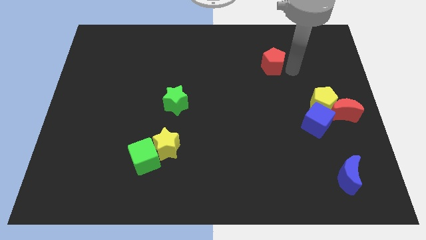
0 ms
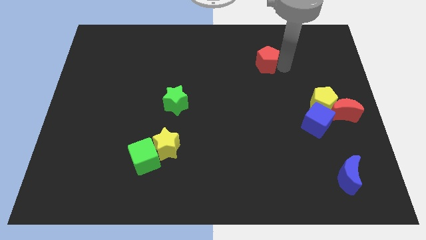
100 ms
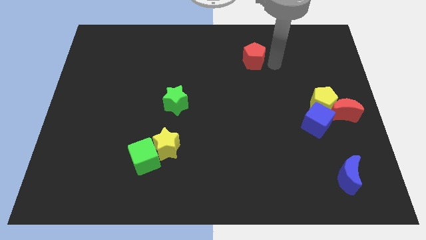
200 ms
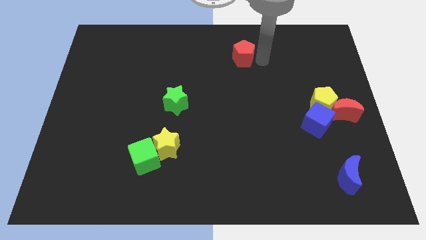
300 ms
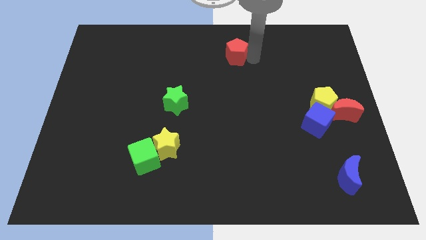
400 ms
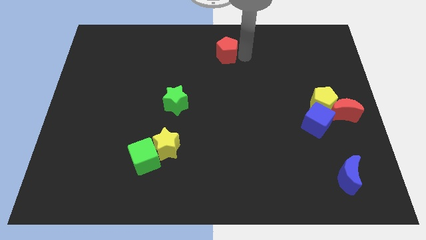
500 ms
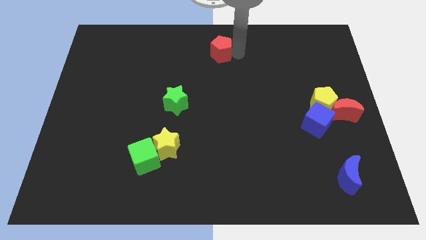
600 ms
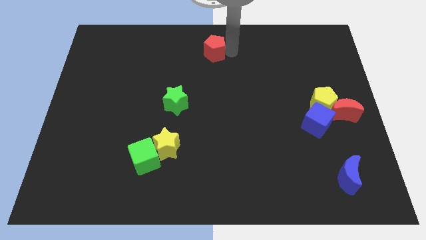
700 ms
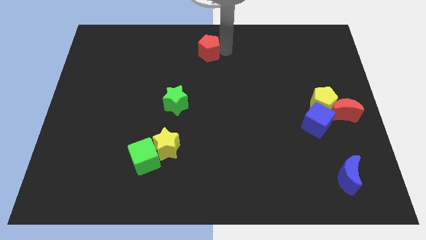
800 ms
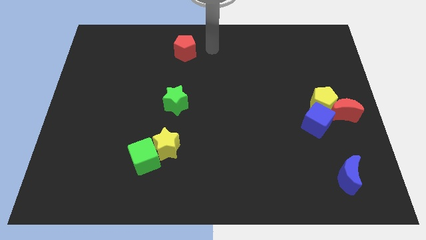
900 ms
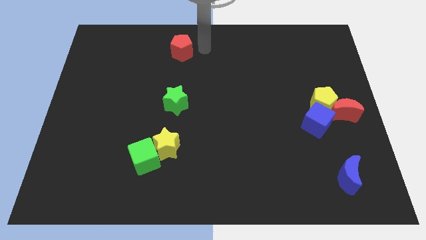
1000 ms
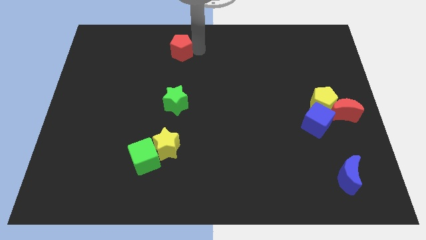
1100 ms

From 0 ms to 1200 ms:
place red pentagon to the top of green star

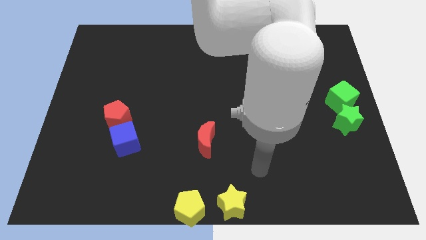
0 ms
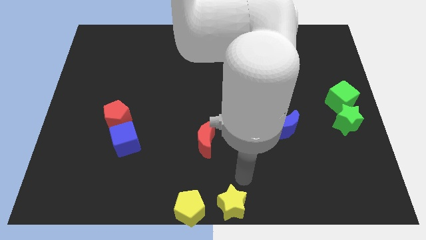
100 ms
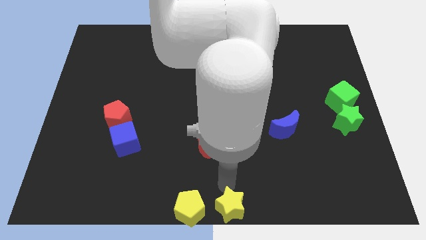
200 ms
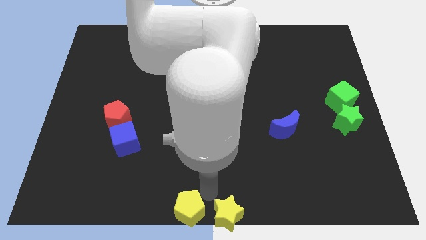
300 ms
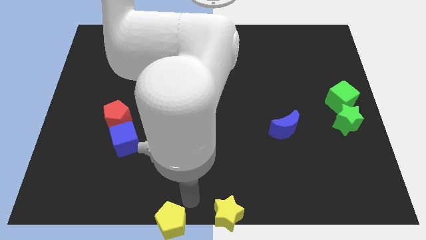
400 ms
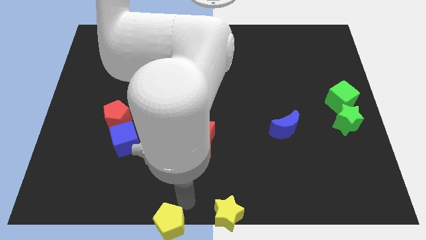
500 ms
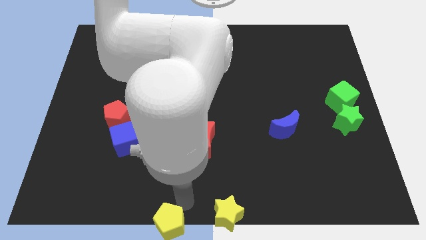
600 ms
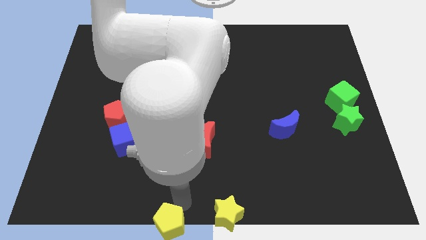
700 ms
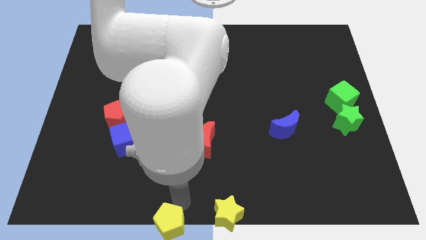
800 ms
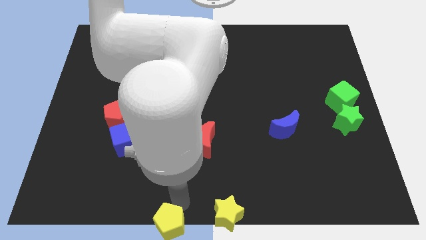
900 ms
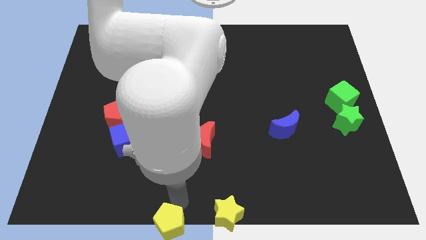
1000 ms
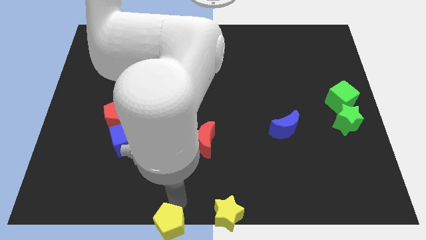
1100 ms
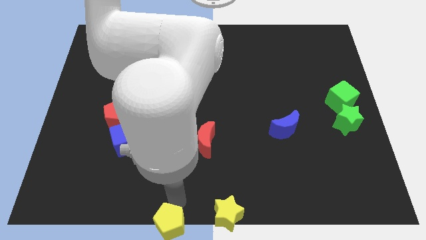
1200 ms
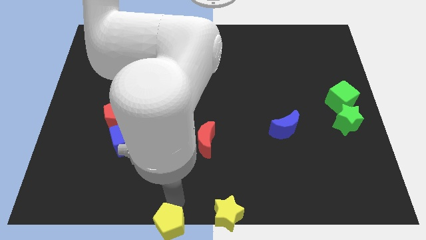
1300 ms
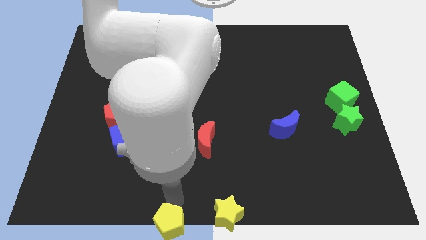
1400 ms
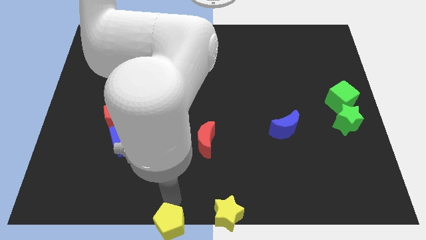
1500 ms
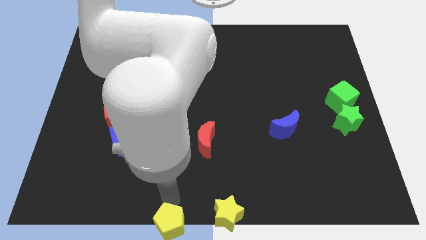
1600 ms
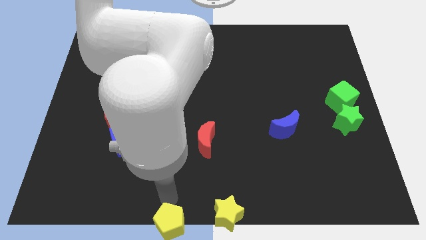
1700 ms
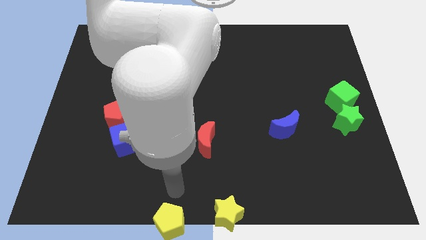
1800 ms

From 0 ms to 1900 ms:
push yellow pentagon out of the board

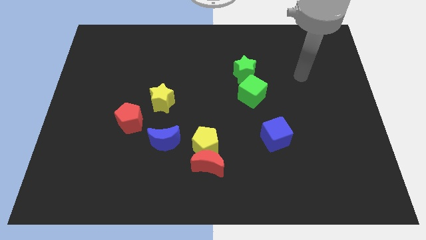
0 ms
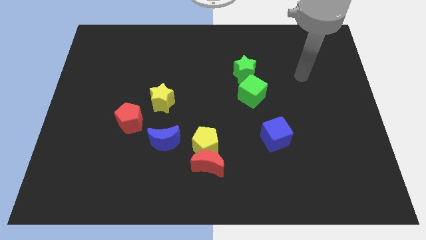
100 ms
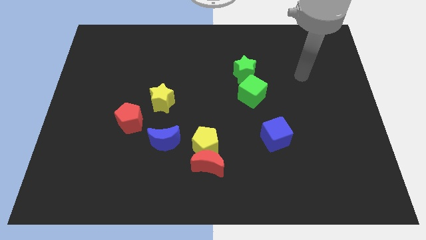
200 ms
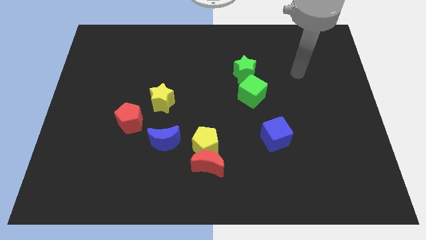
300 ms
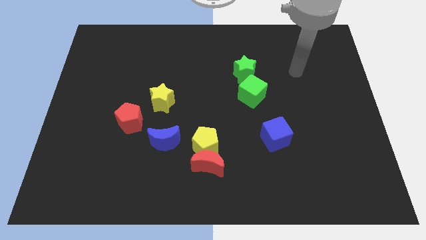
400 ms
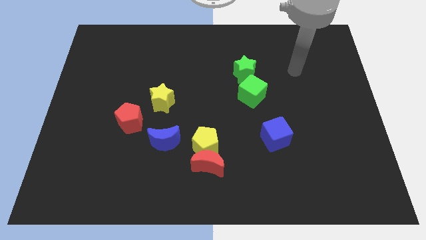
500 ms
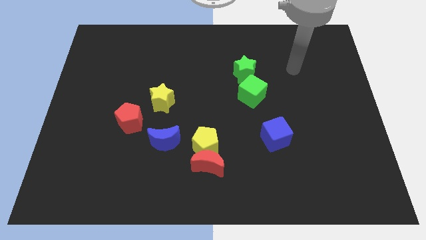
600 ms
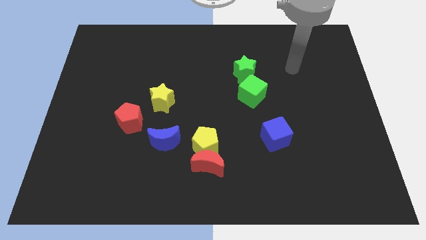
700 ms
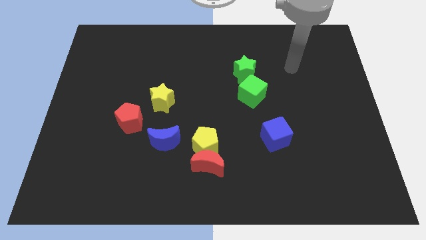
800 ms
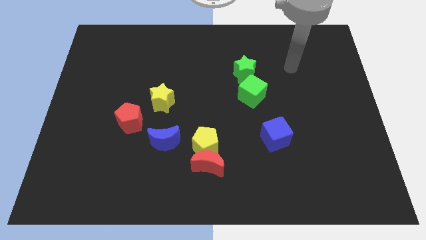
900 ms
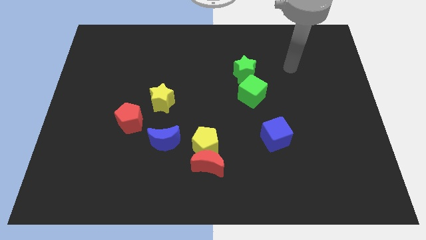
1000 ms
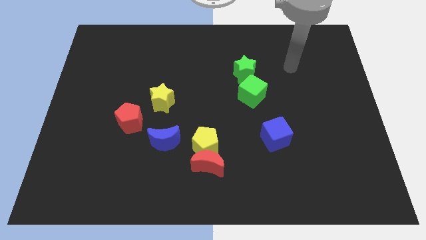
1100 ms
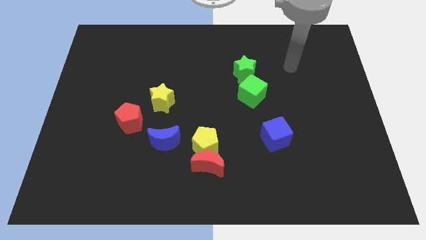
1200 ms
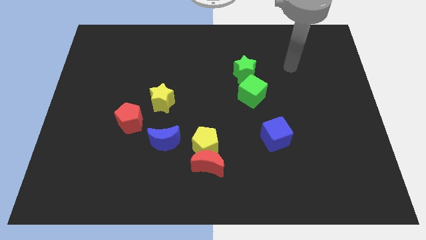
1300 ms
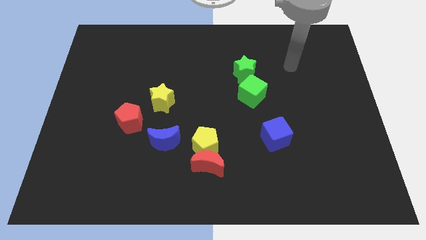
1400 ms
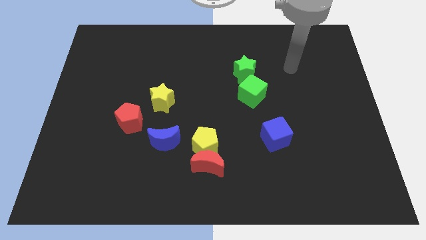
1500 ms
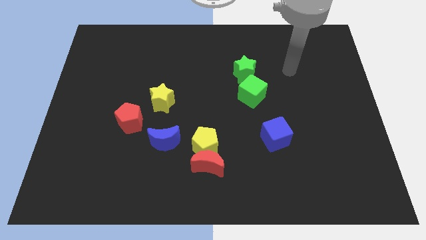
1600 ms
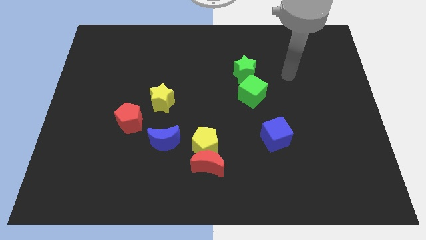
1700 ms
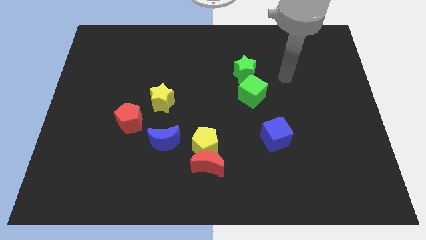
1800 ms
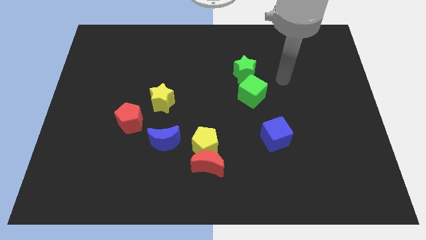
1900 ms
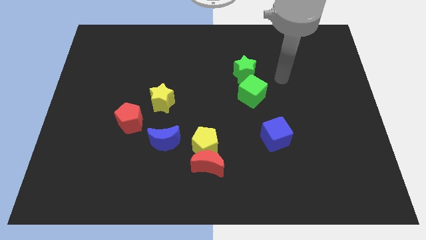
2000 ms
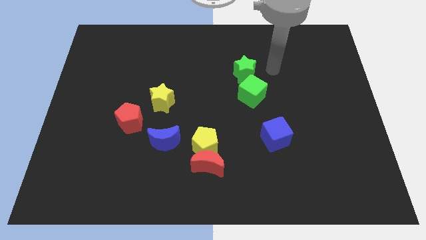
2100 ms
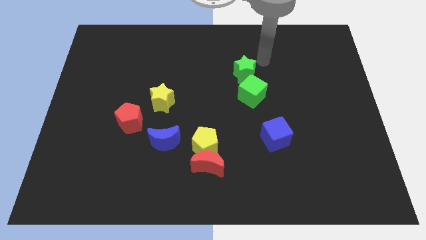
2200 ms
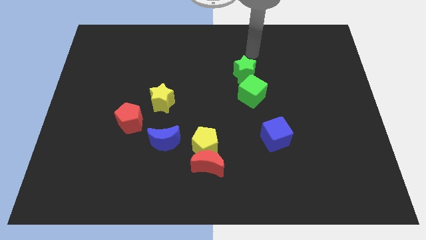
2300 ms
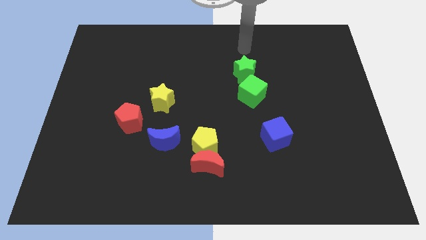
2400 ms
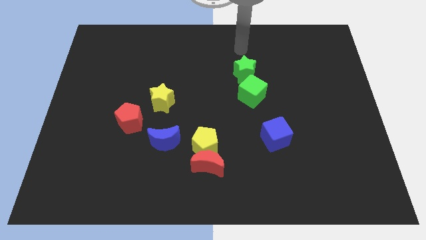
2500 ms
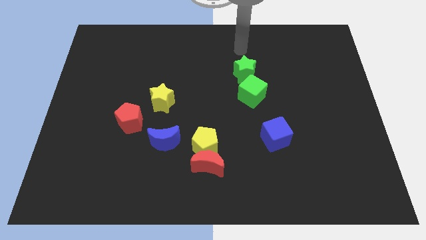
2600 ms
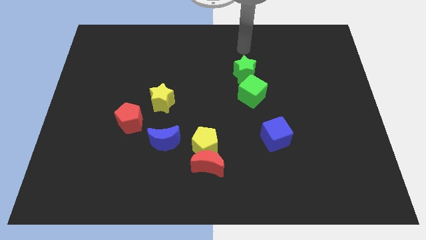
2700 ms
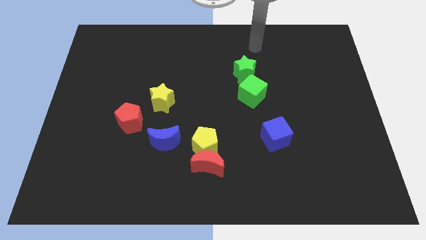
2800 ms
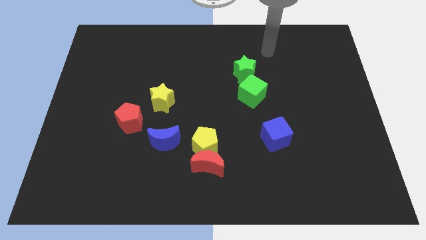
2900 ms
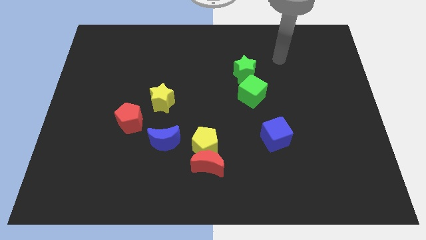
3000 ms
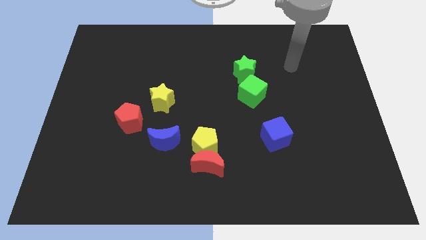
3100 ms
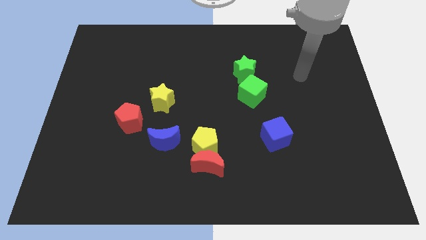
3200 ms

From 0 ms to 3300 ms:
point your hand at the right side of the green star

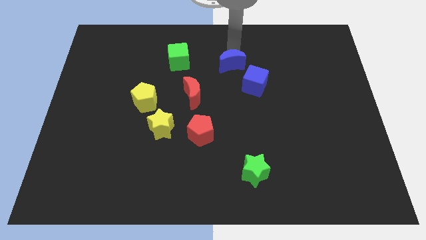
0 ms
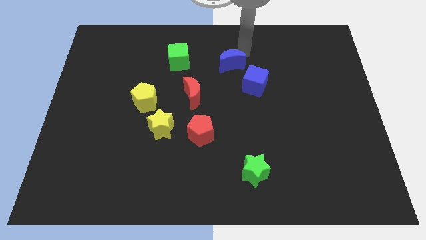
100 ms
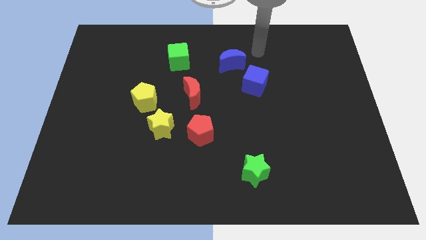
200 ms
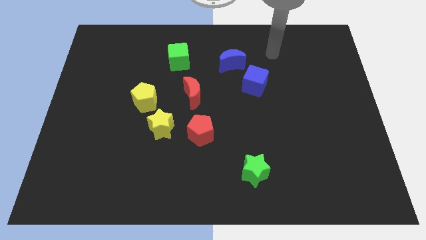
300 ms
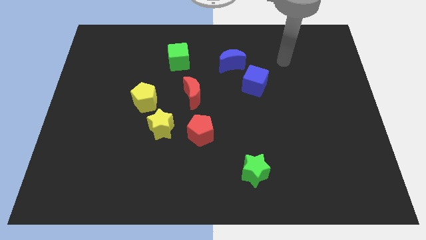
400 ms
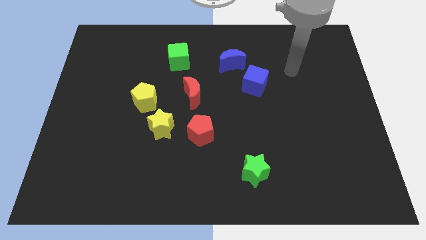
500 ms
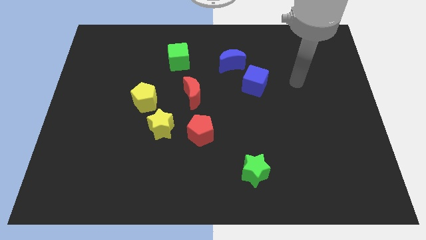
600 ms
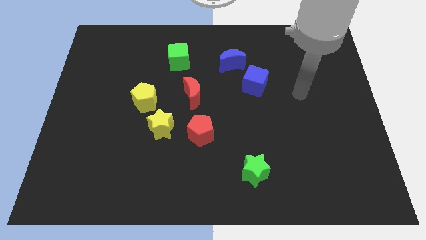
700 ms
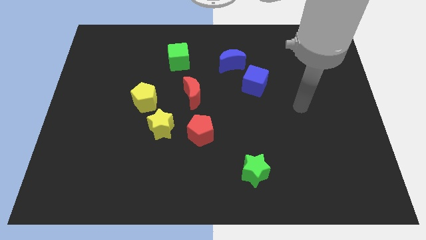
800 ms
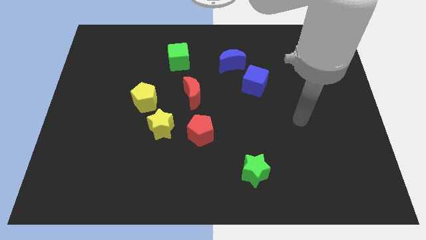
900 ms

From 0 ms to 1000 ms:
place your arm diagonally to the bottom right of the blue cube

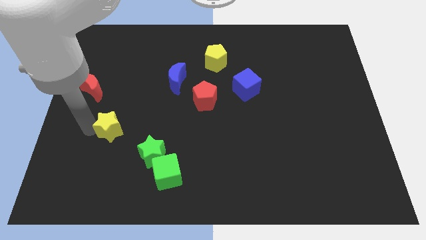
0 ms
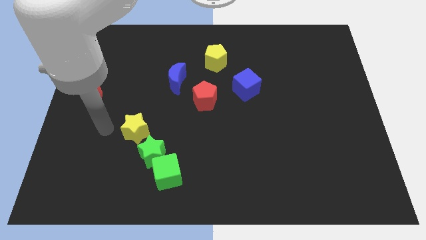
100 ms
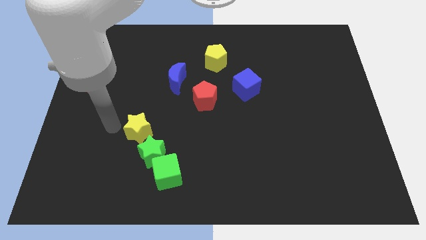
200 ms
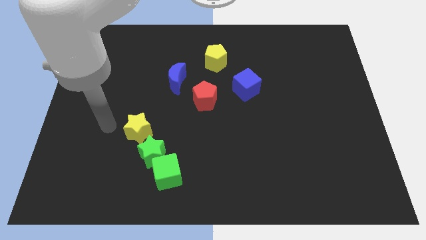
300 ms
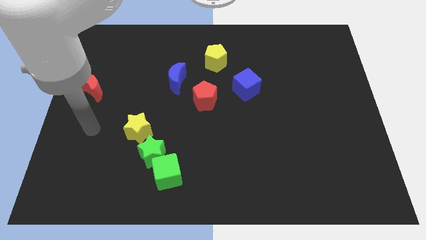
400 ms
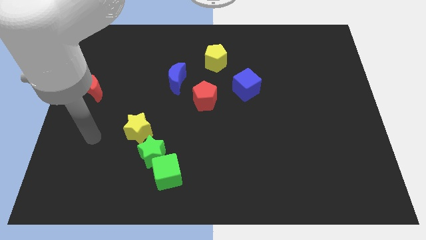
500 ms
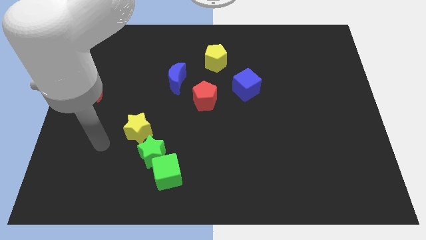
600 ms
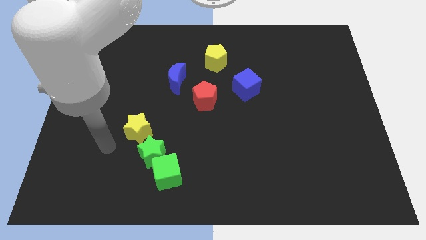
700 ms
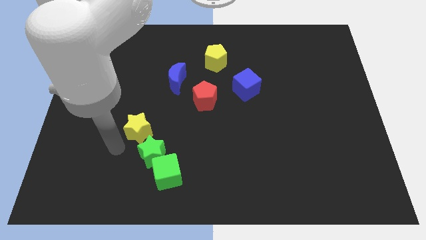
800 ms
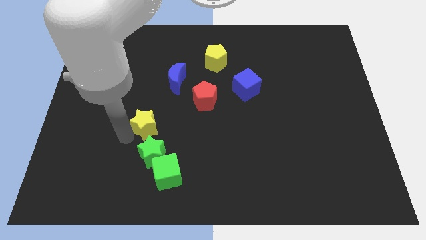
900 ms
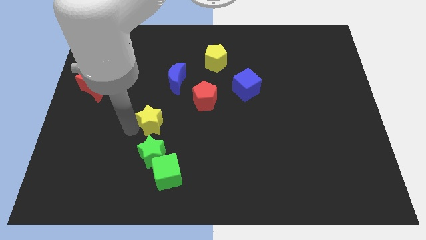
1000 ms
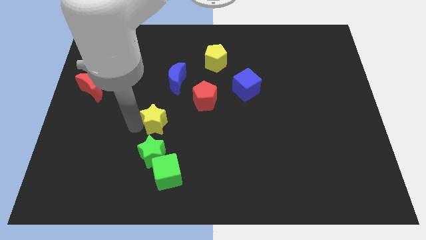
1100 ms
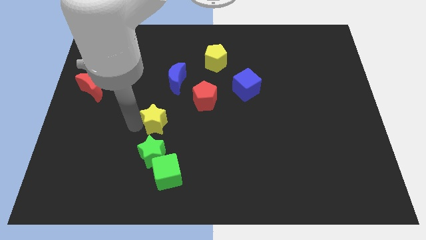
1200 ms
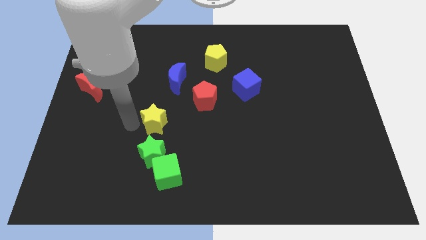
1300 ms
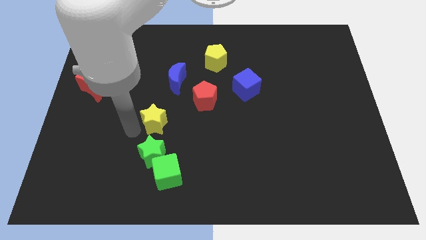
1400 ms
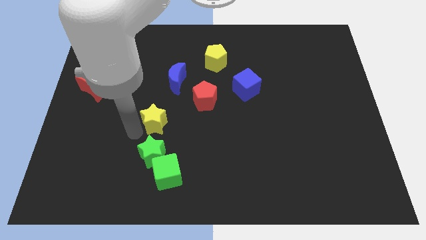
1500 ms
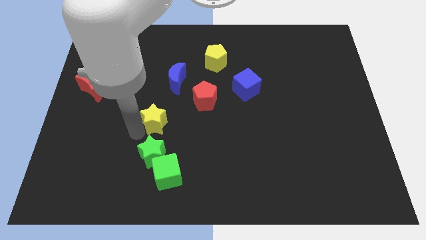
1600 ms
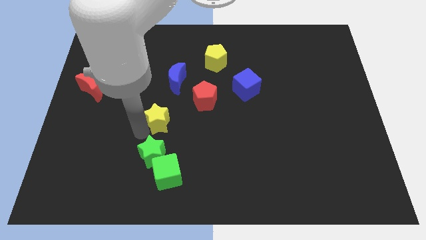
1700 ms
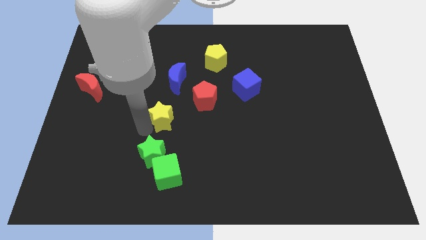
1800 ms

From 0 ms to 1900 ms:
place the yellow star to the top side of the green star
